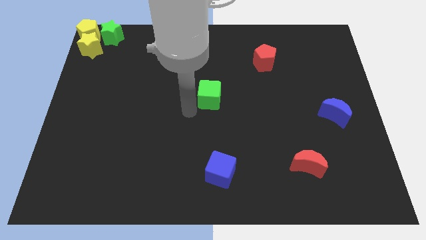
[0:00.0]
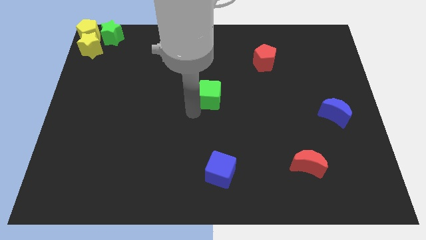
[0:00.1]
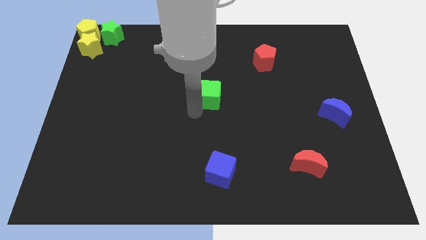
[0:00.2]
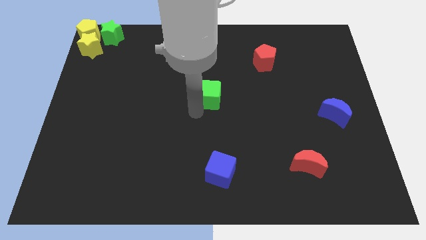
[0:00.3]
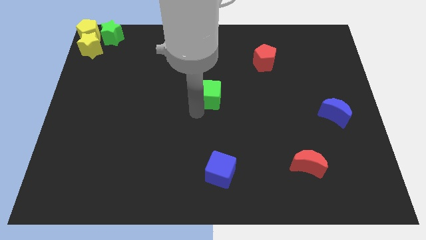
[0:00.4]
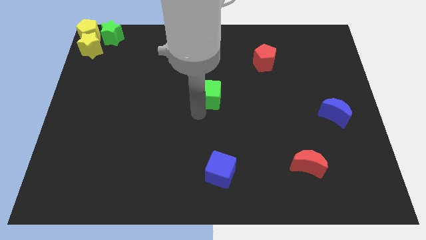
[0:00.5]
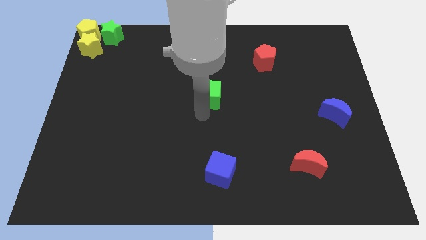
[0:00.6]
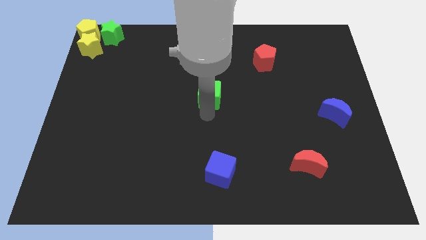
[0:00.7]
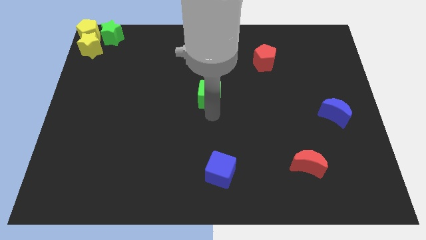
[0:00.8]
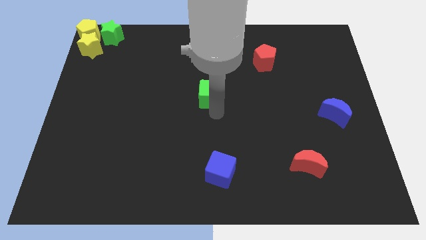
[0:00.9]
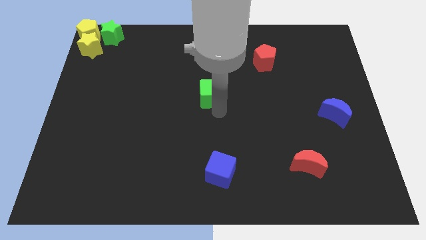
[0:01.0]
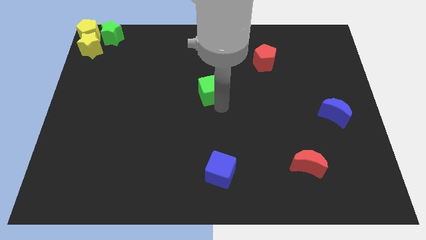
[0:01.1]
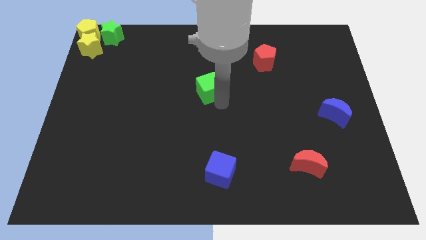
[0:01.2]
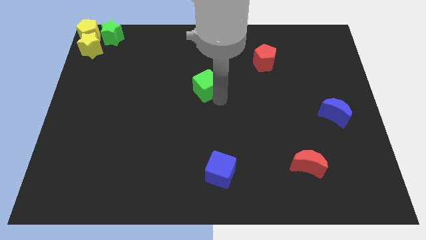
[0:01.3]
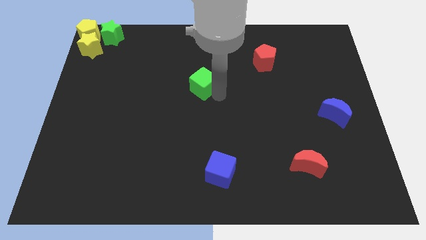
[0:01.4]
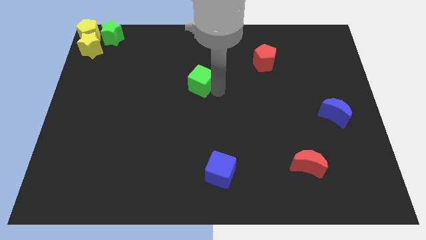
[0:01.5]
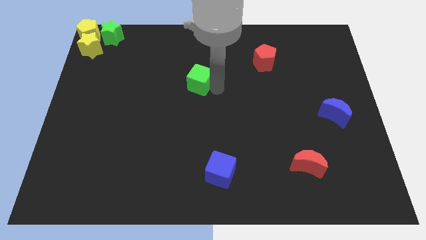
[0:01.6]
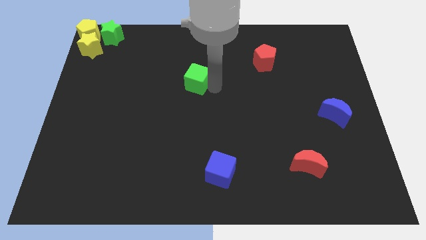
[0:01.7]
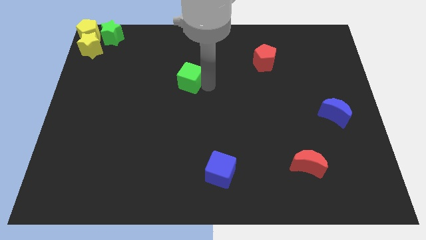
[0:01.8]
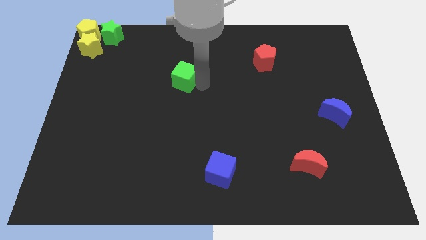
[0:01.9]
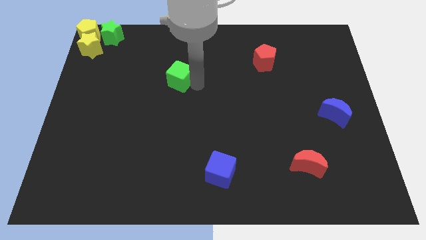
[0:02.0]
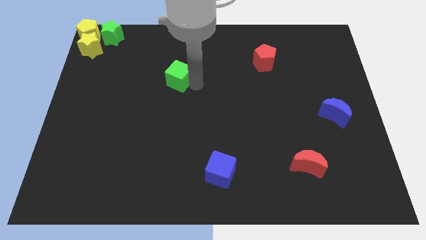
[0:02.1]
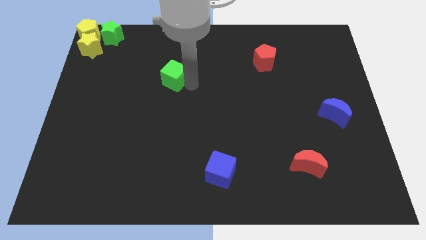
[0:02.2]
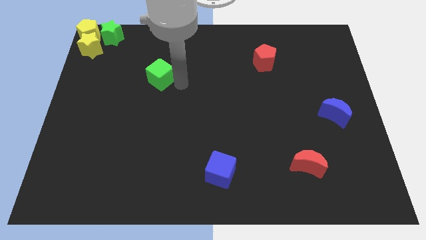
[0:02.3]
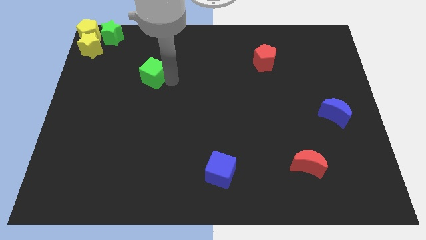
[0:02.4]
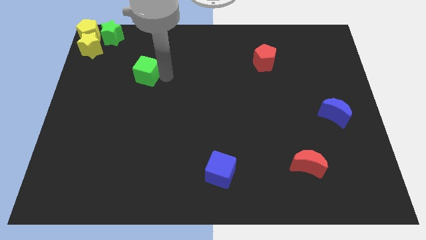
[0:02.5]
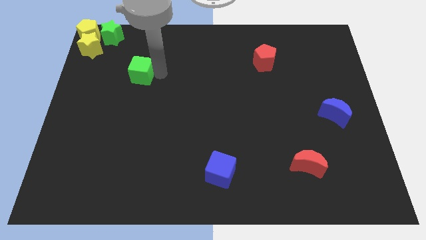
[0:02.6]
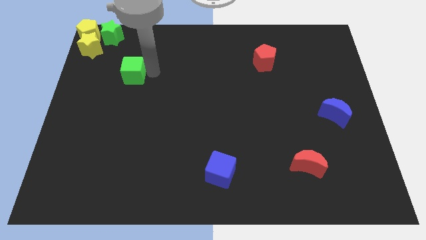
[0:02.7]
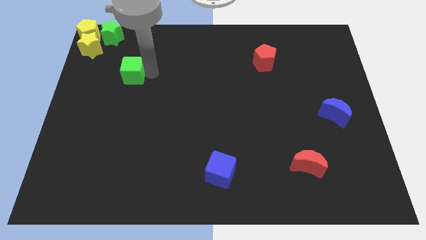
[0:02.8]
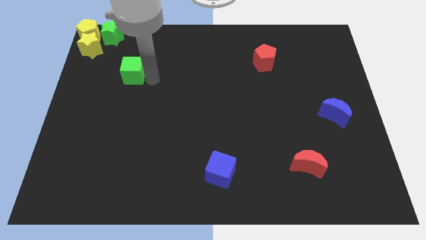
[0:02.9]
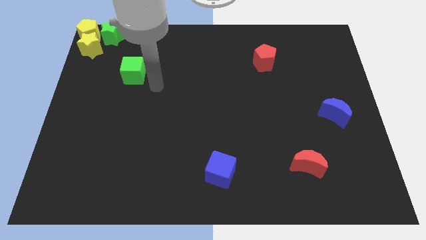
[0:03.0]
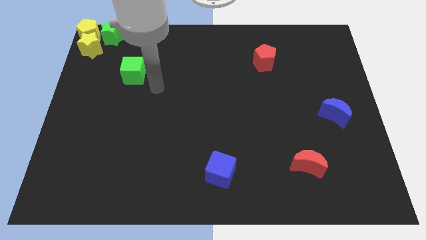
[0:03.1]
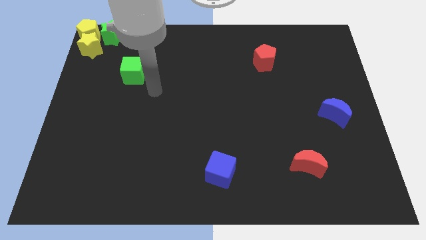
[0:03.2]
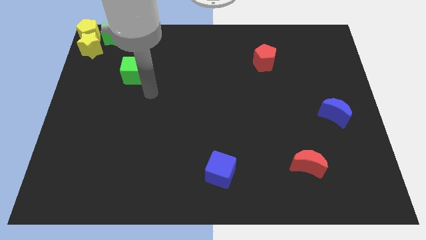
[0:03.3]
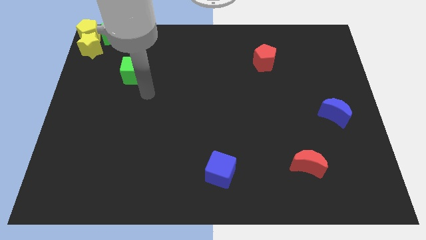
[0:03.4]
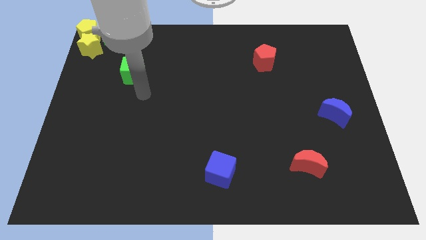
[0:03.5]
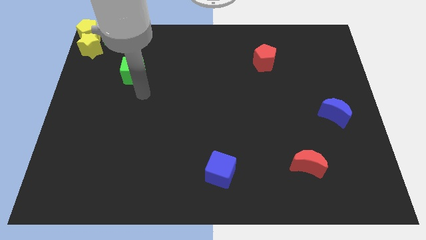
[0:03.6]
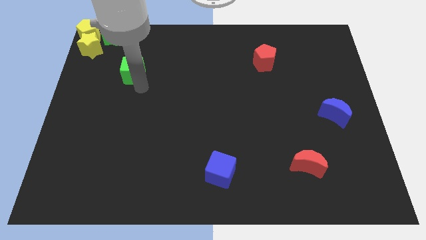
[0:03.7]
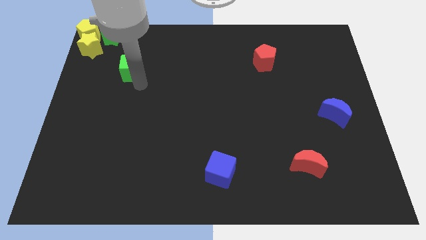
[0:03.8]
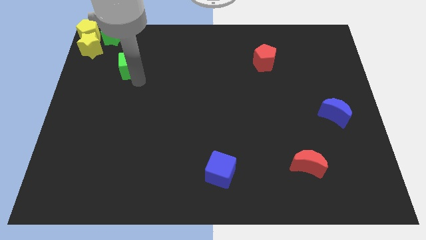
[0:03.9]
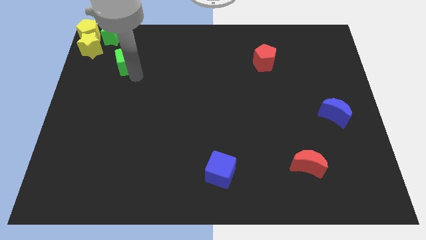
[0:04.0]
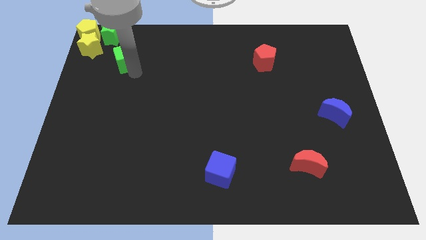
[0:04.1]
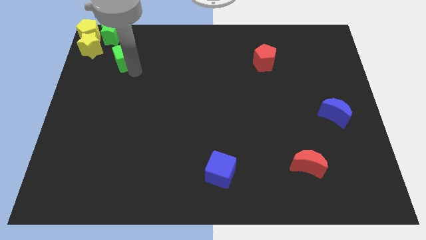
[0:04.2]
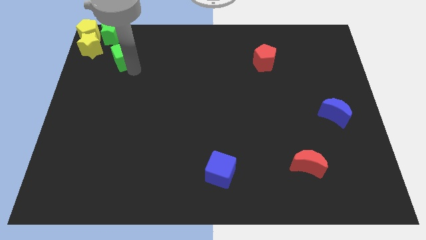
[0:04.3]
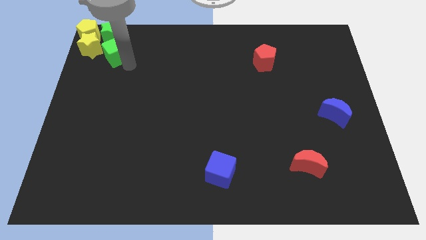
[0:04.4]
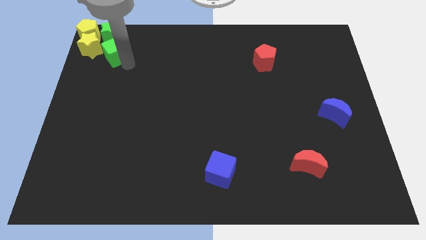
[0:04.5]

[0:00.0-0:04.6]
move the green cube towards the green star

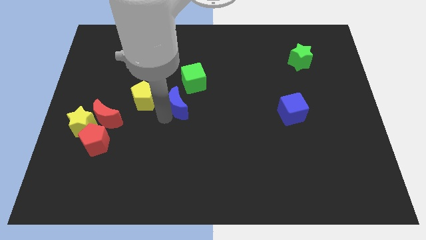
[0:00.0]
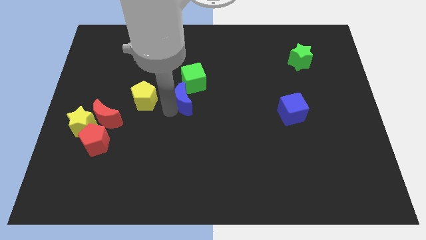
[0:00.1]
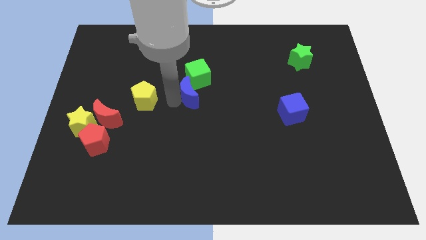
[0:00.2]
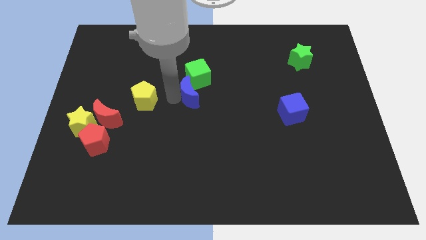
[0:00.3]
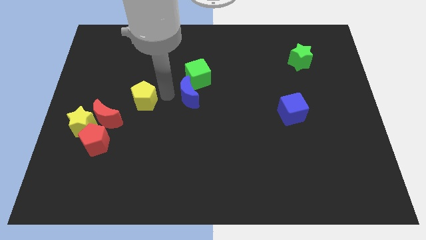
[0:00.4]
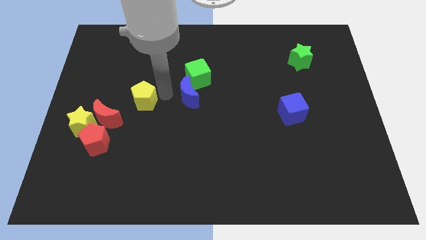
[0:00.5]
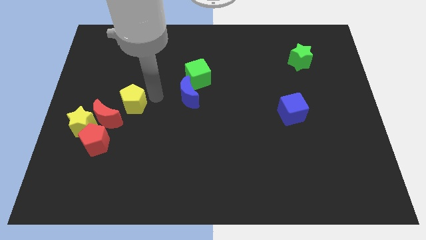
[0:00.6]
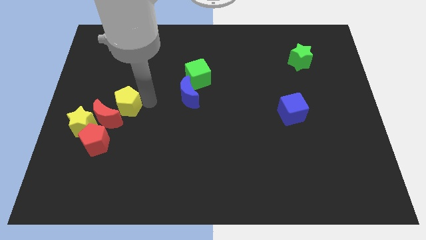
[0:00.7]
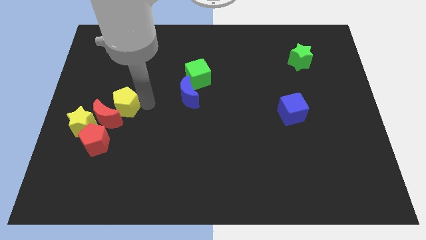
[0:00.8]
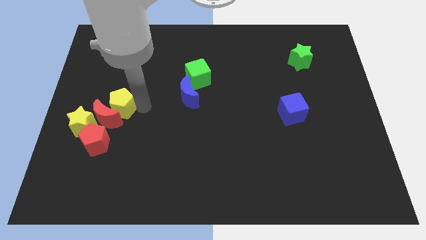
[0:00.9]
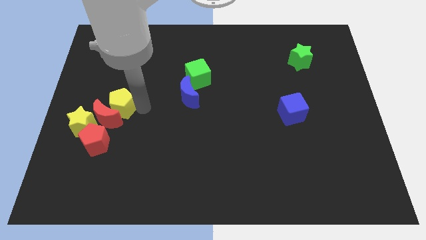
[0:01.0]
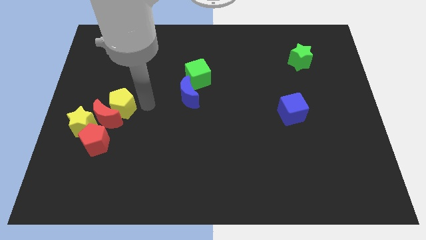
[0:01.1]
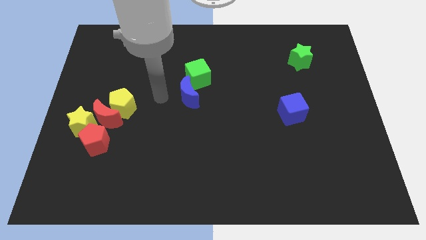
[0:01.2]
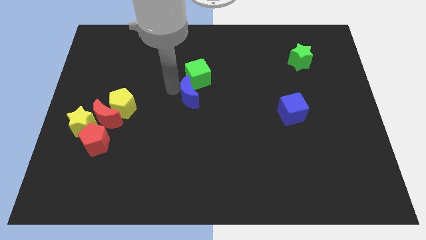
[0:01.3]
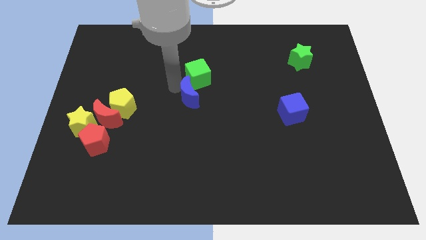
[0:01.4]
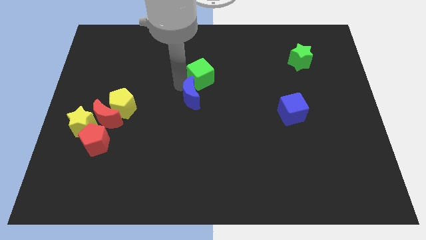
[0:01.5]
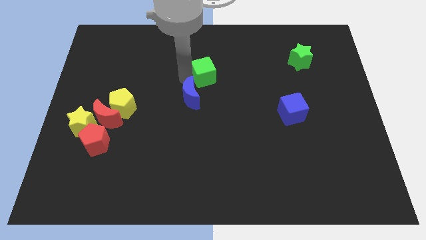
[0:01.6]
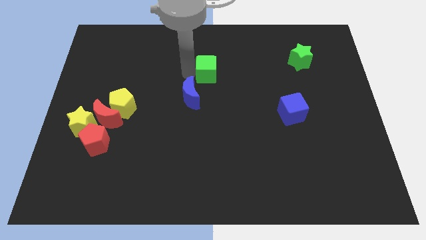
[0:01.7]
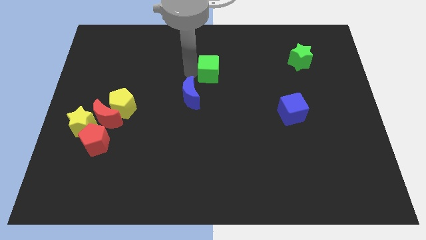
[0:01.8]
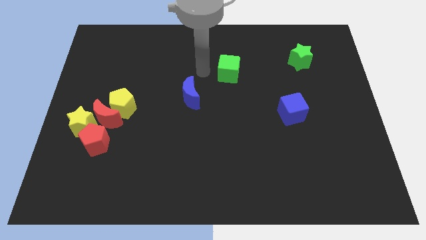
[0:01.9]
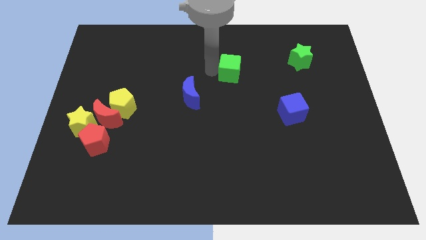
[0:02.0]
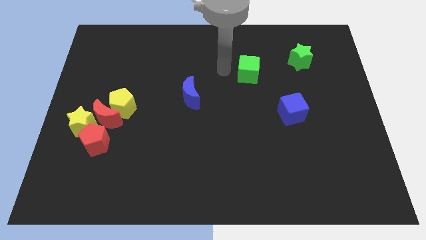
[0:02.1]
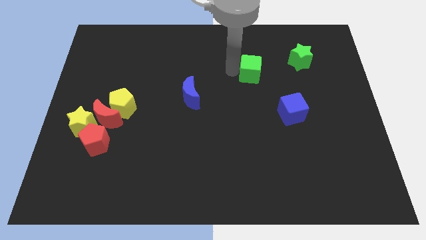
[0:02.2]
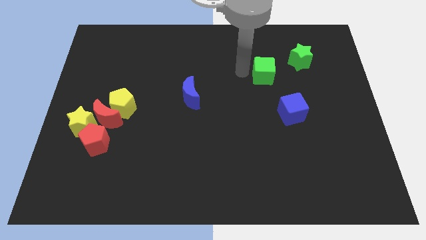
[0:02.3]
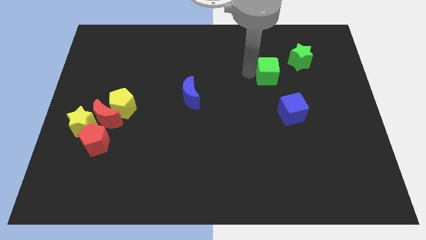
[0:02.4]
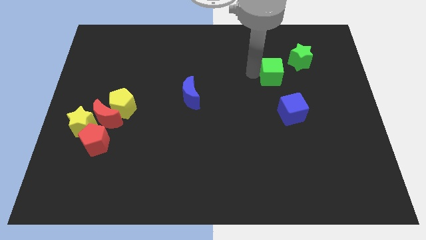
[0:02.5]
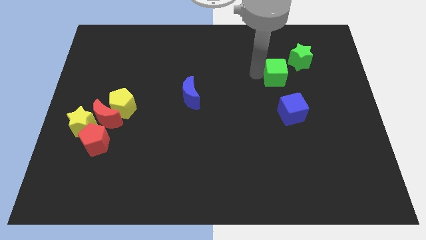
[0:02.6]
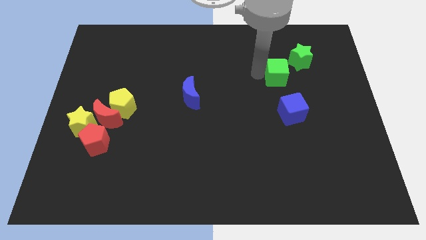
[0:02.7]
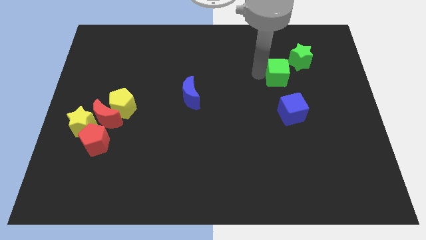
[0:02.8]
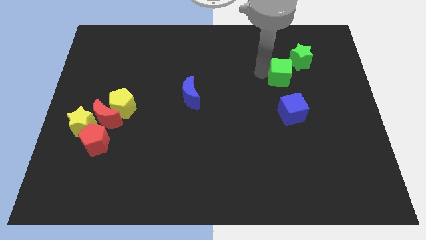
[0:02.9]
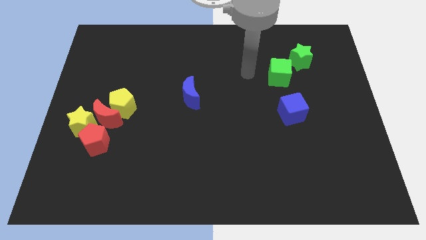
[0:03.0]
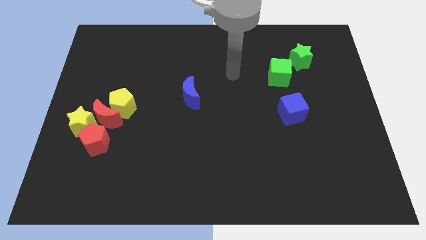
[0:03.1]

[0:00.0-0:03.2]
separate the green cube from the blue moon

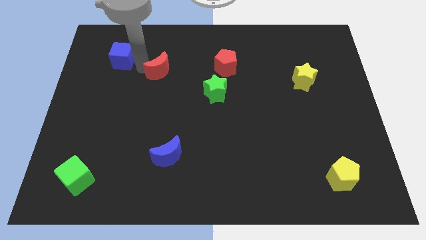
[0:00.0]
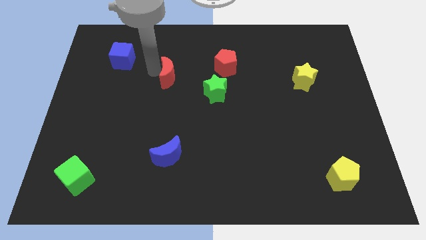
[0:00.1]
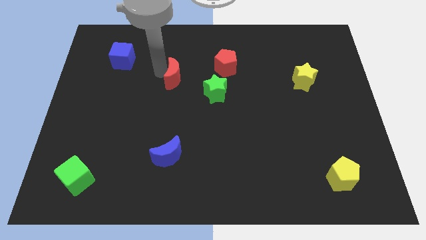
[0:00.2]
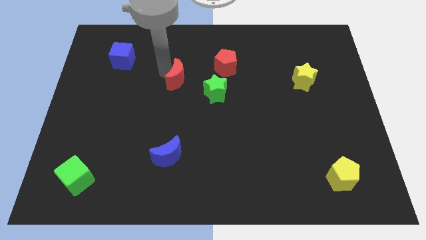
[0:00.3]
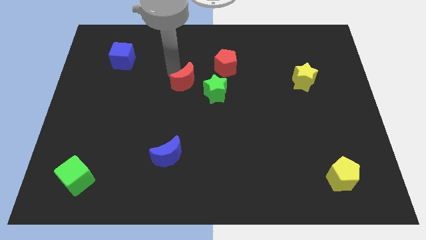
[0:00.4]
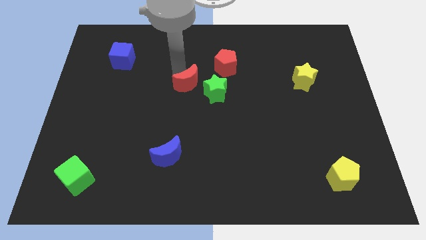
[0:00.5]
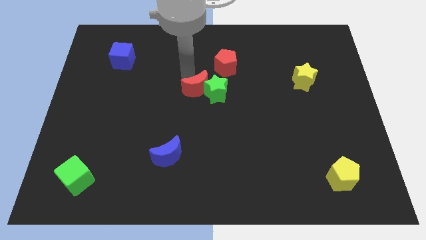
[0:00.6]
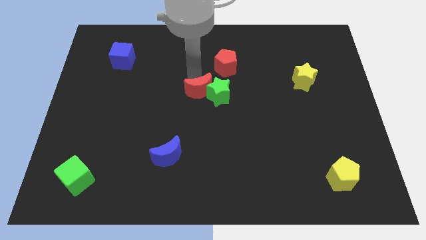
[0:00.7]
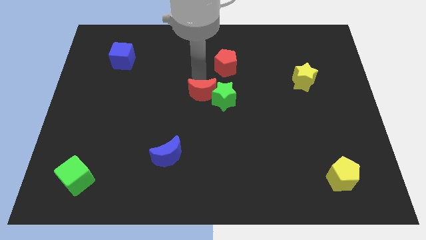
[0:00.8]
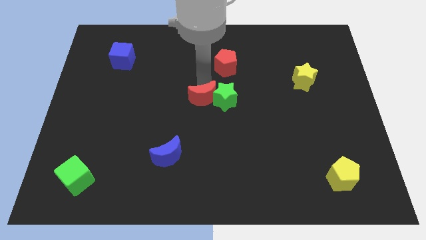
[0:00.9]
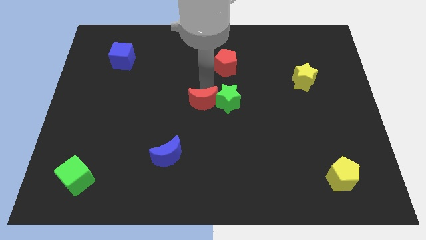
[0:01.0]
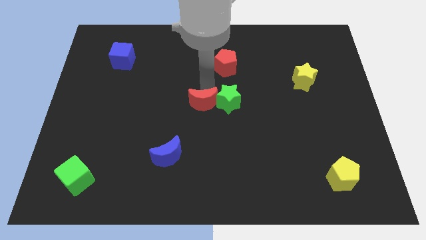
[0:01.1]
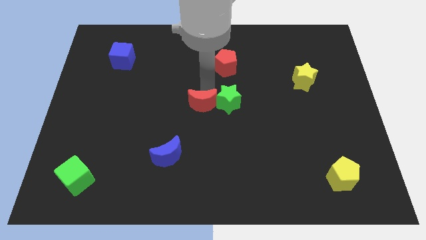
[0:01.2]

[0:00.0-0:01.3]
place the red moon left to green star
